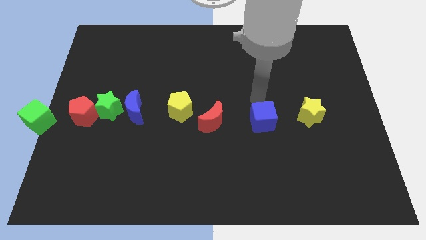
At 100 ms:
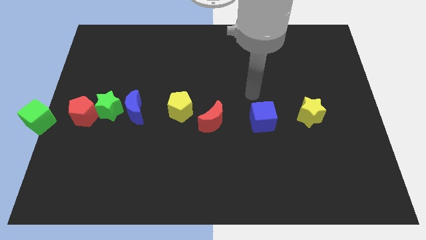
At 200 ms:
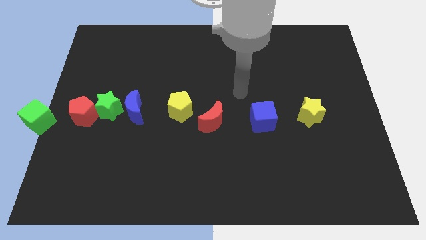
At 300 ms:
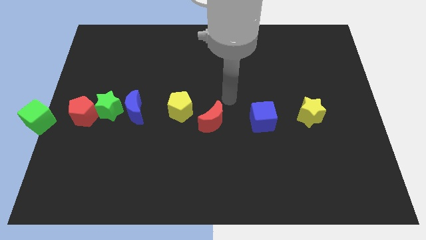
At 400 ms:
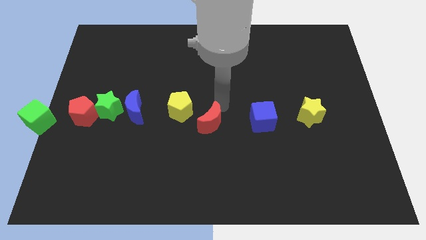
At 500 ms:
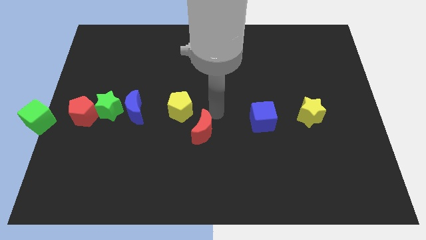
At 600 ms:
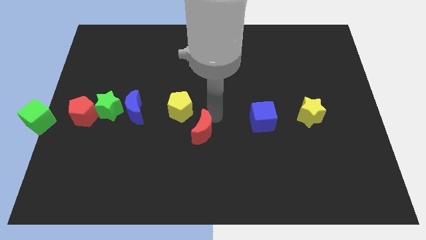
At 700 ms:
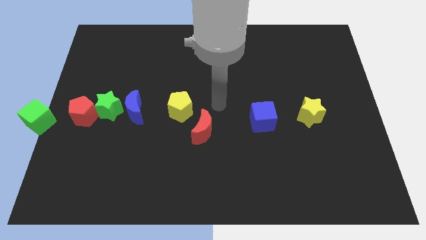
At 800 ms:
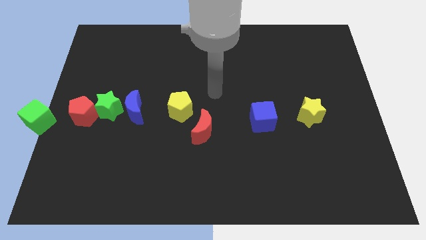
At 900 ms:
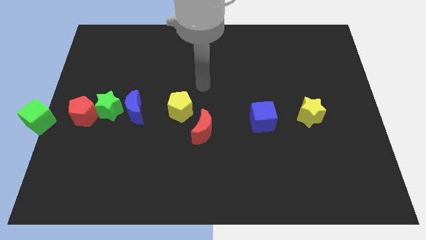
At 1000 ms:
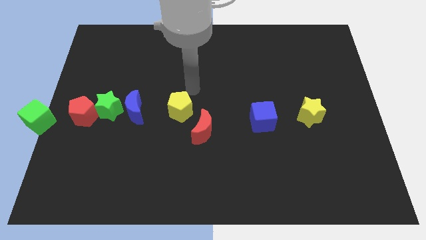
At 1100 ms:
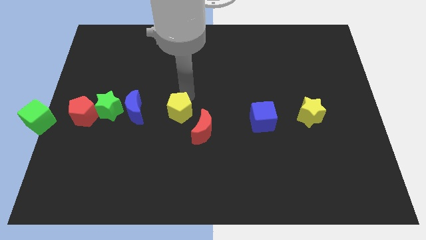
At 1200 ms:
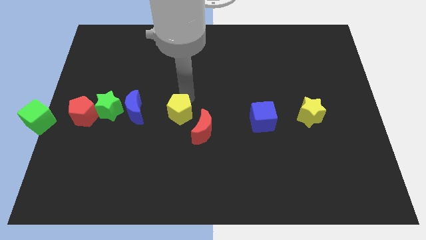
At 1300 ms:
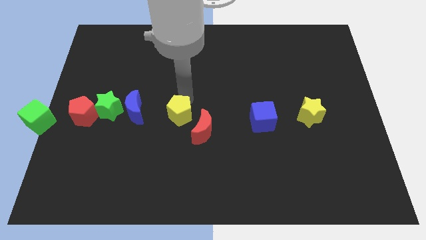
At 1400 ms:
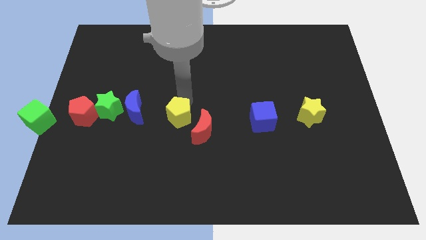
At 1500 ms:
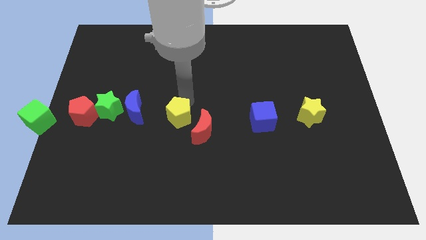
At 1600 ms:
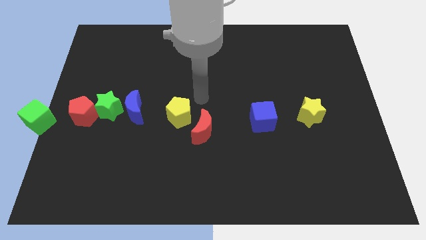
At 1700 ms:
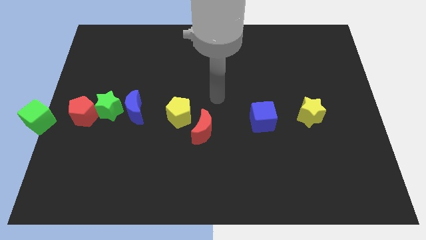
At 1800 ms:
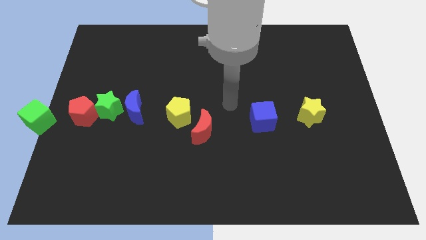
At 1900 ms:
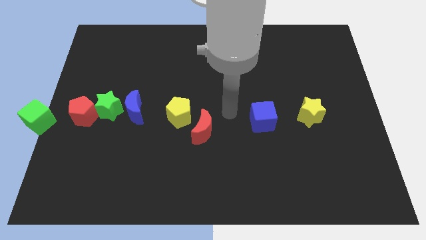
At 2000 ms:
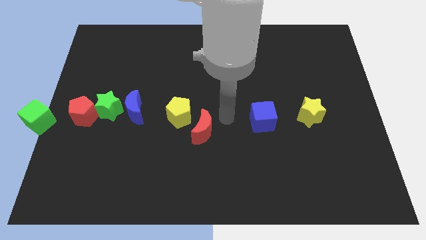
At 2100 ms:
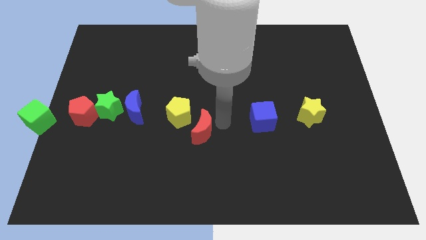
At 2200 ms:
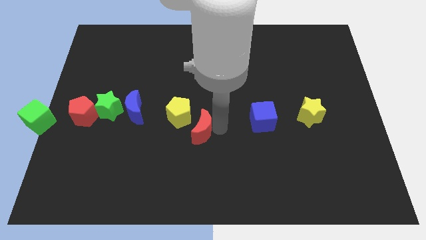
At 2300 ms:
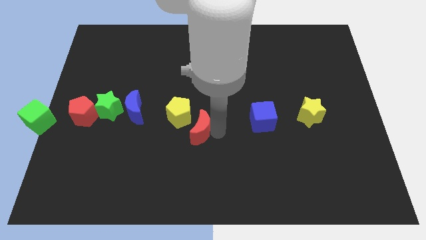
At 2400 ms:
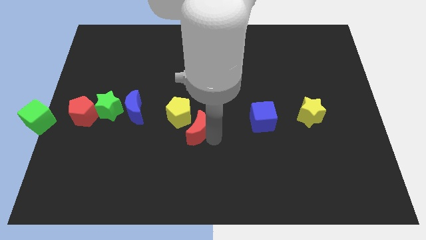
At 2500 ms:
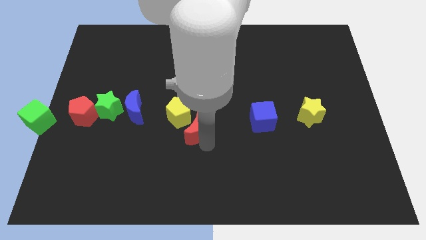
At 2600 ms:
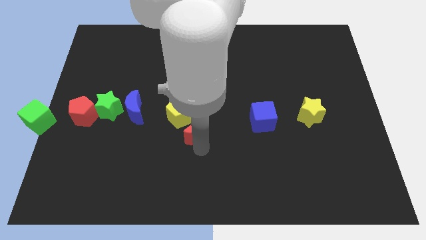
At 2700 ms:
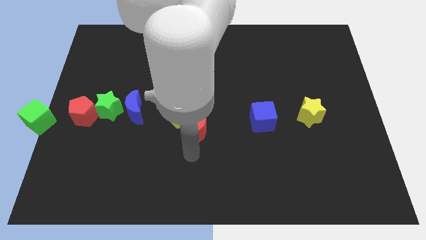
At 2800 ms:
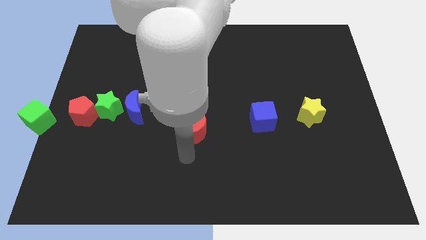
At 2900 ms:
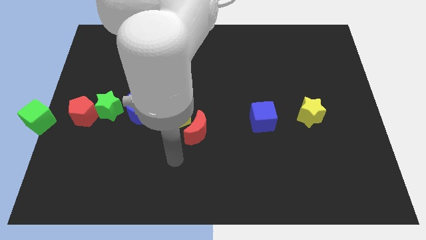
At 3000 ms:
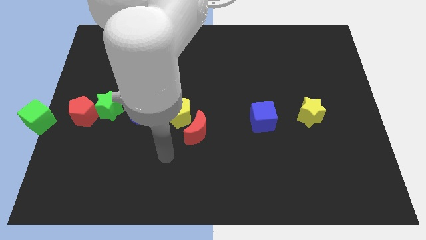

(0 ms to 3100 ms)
move the red moon below the yellow pentagon

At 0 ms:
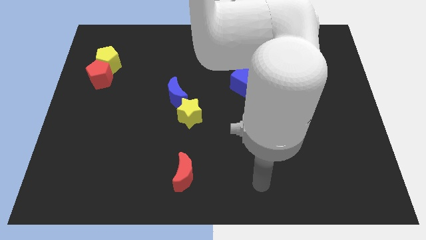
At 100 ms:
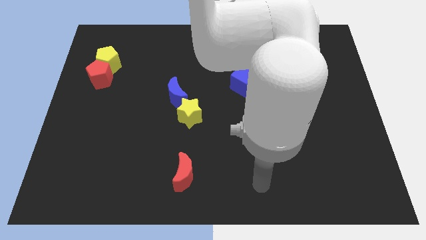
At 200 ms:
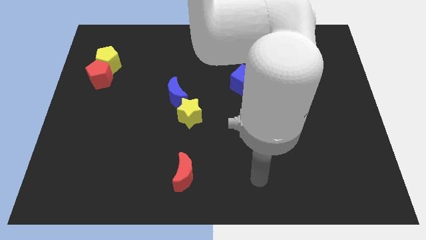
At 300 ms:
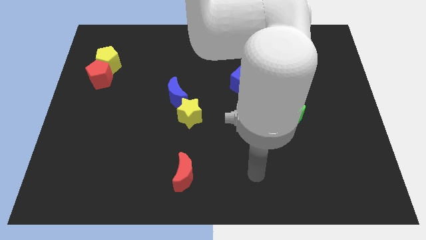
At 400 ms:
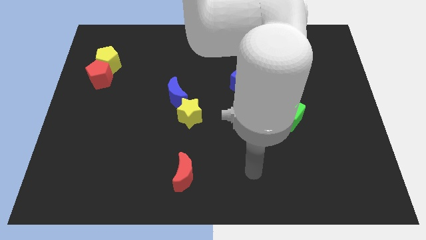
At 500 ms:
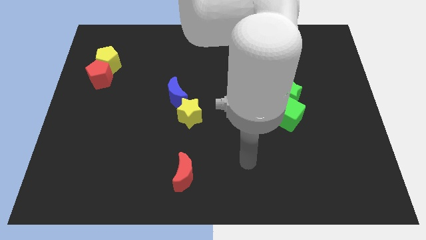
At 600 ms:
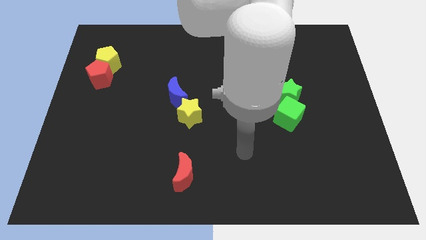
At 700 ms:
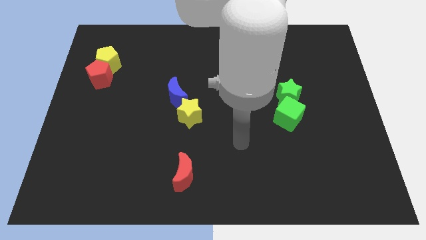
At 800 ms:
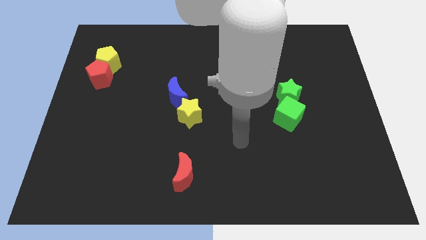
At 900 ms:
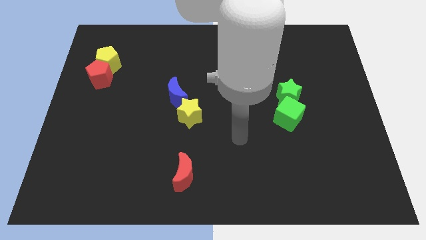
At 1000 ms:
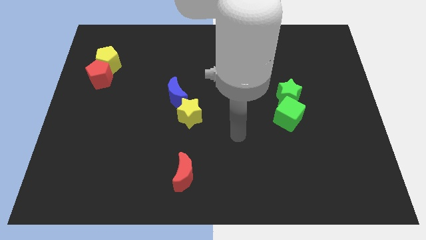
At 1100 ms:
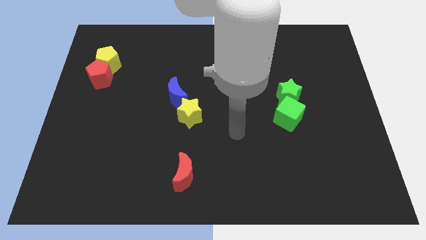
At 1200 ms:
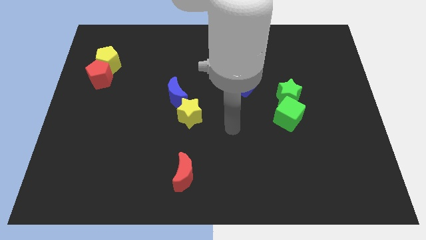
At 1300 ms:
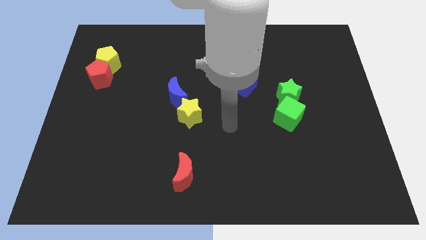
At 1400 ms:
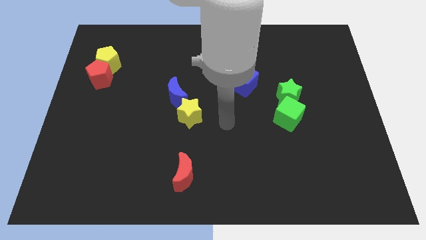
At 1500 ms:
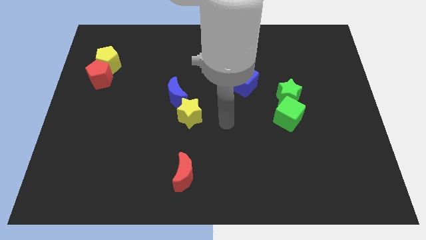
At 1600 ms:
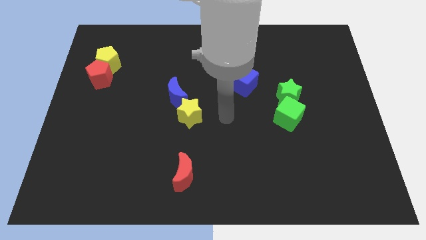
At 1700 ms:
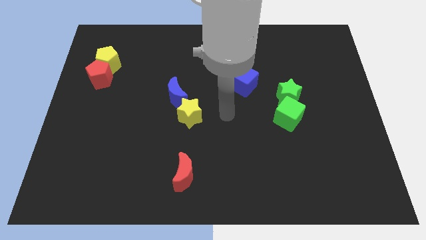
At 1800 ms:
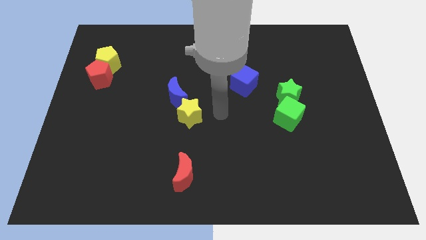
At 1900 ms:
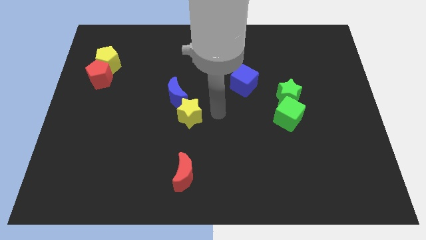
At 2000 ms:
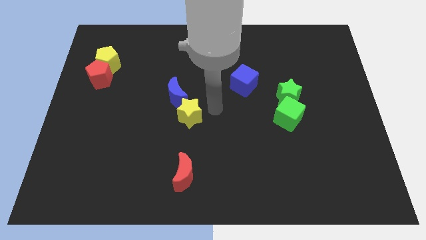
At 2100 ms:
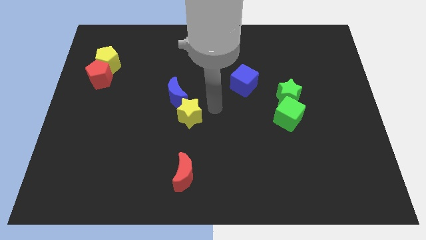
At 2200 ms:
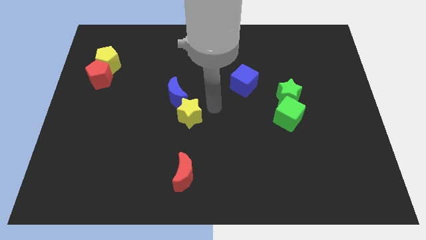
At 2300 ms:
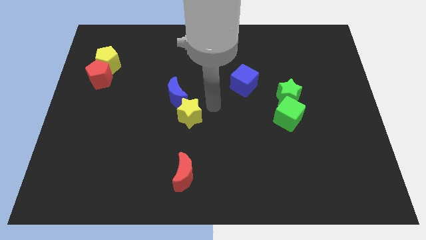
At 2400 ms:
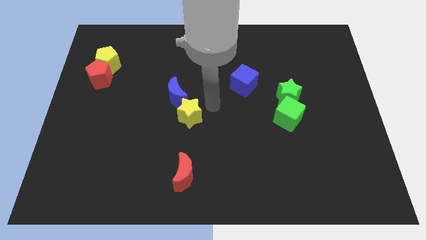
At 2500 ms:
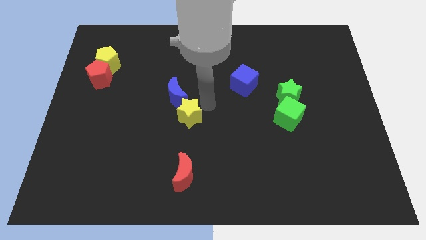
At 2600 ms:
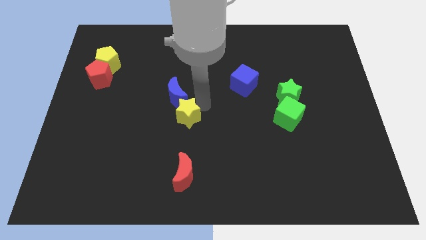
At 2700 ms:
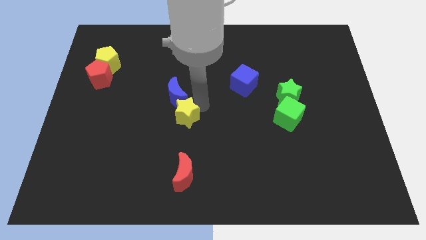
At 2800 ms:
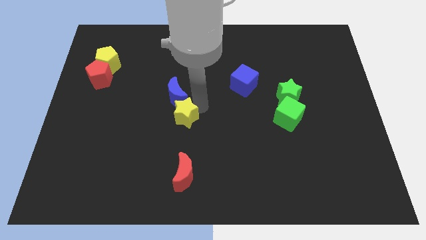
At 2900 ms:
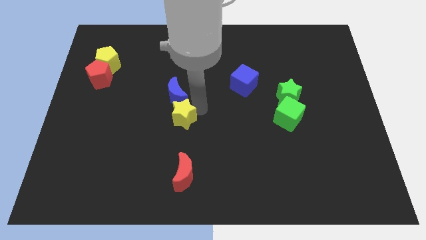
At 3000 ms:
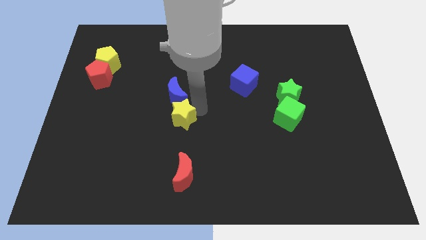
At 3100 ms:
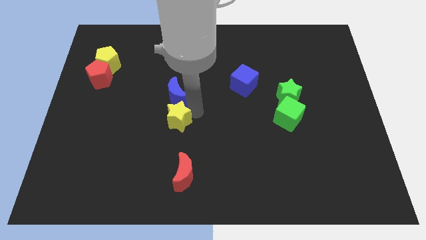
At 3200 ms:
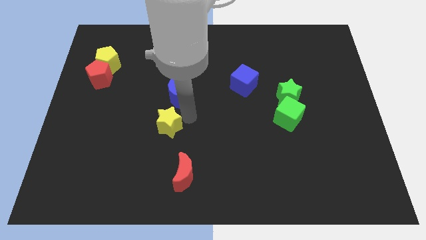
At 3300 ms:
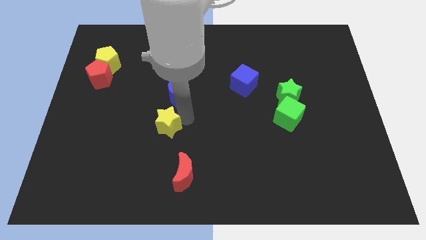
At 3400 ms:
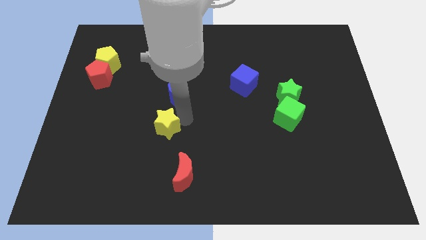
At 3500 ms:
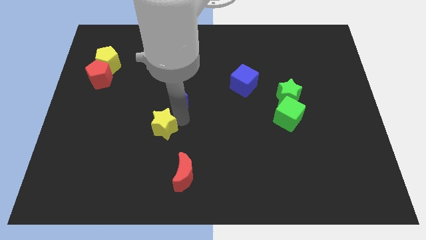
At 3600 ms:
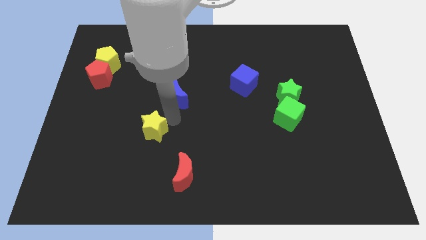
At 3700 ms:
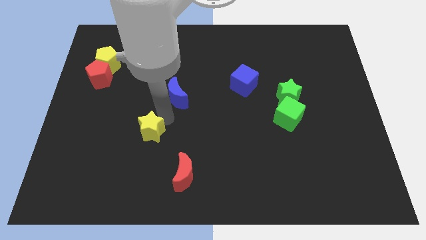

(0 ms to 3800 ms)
slightly push the yellow star to the bottom left to the board

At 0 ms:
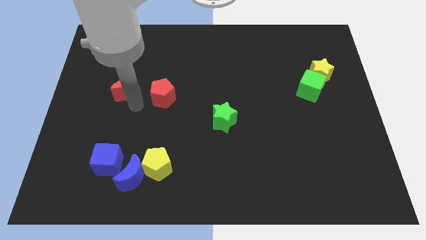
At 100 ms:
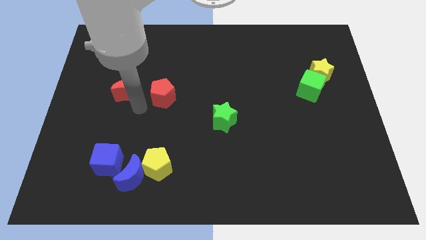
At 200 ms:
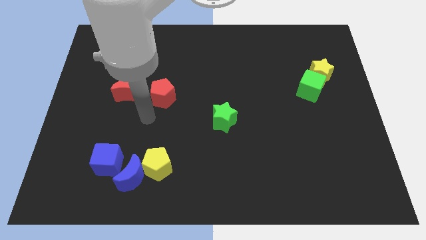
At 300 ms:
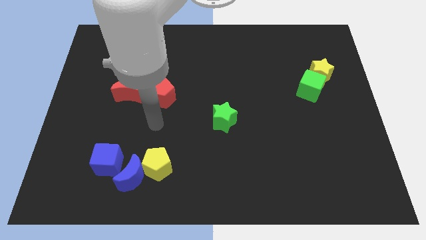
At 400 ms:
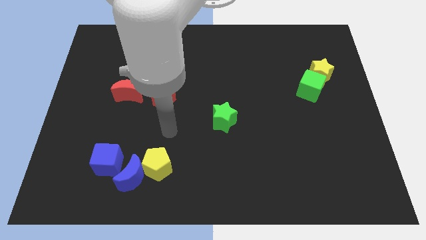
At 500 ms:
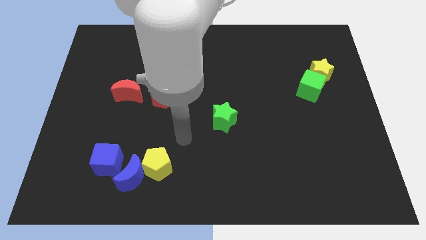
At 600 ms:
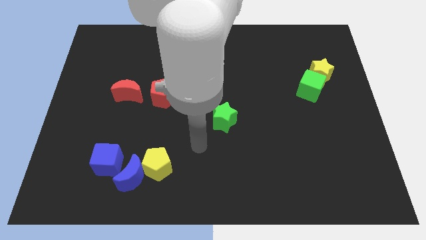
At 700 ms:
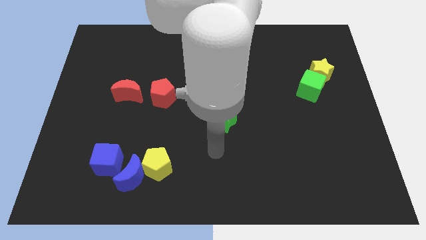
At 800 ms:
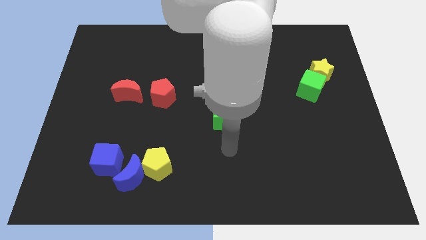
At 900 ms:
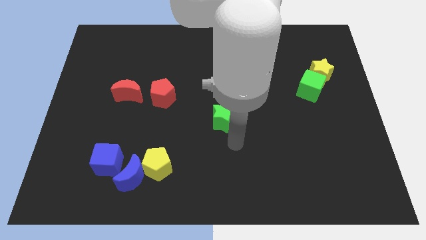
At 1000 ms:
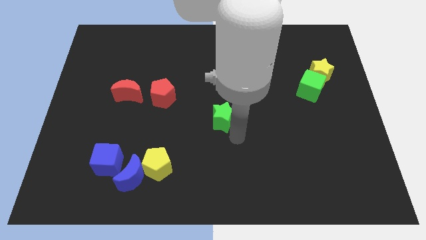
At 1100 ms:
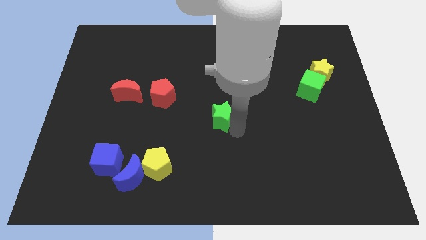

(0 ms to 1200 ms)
move your arm close to the green star

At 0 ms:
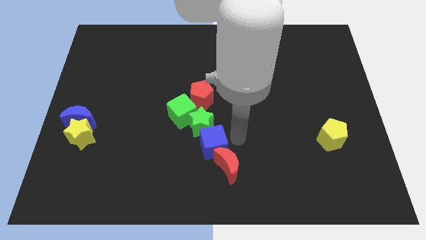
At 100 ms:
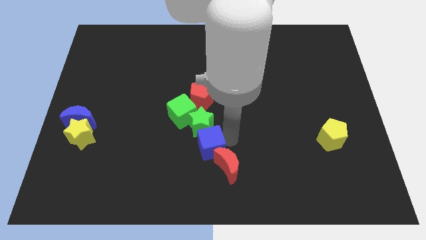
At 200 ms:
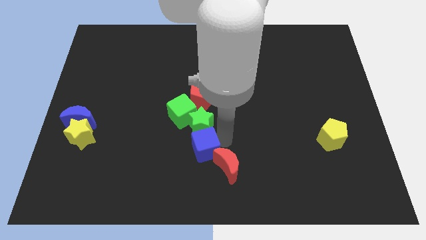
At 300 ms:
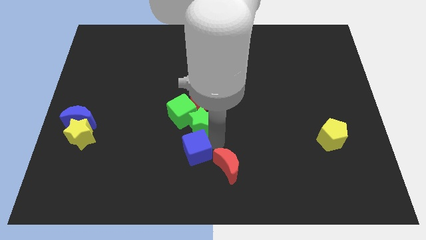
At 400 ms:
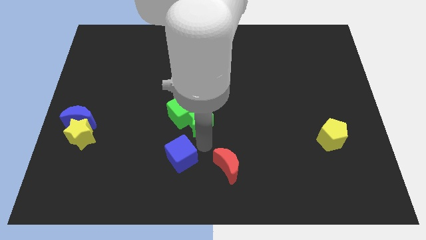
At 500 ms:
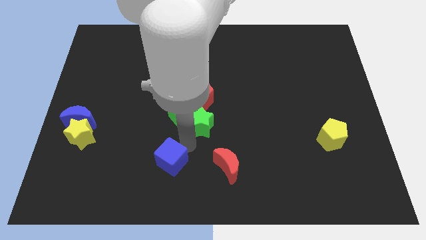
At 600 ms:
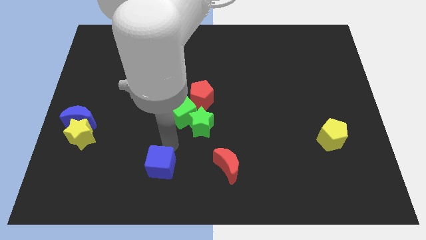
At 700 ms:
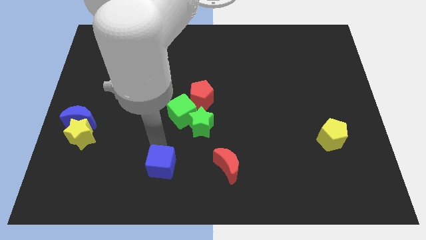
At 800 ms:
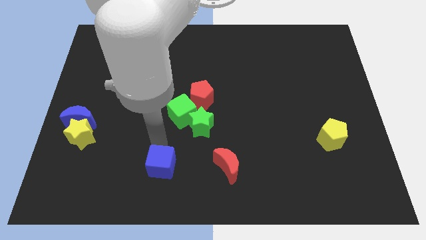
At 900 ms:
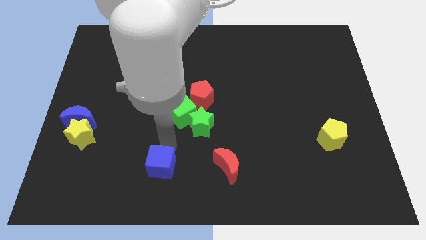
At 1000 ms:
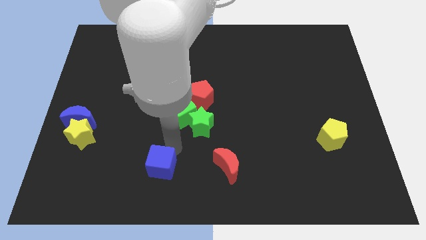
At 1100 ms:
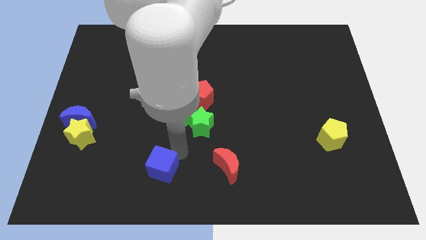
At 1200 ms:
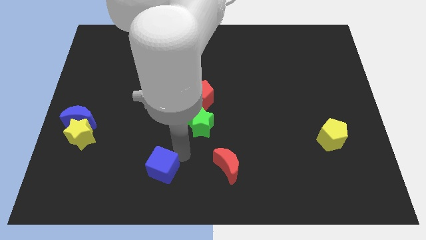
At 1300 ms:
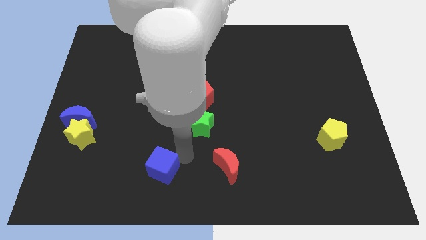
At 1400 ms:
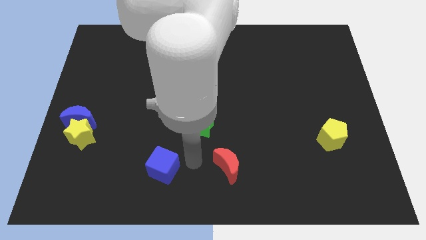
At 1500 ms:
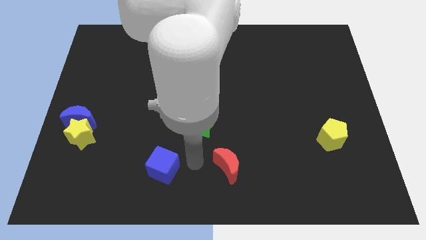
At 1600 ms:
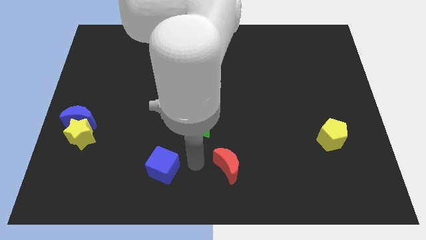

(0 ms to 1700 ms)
separate the blue cube from the group of blocks
